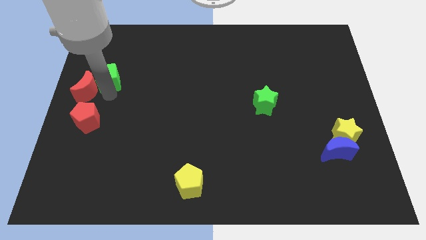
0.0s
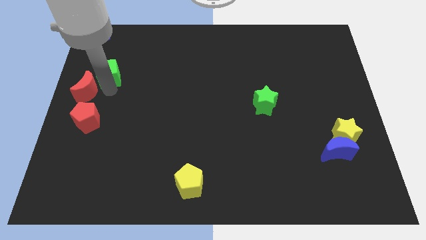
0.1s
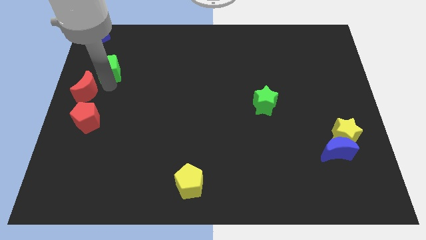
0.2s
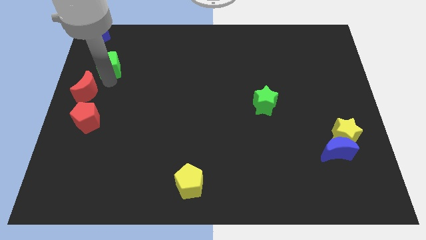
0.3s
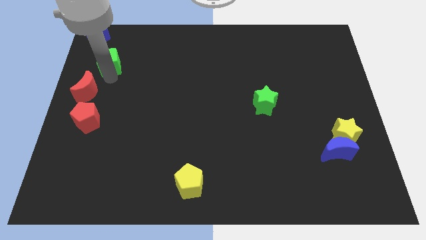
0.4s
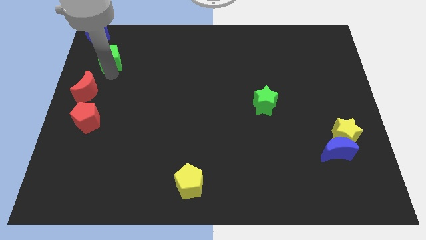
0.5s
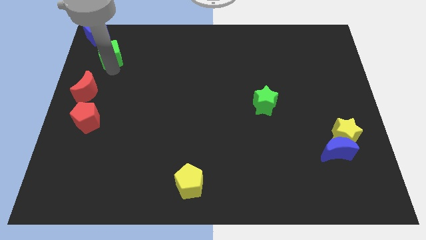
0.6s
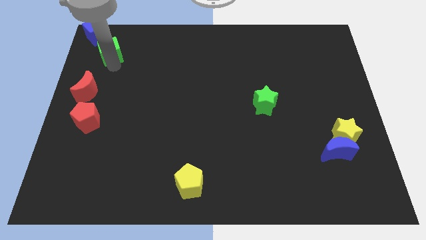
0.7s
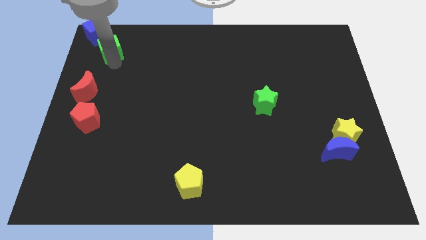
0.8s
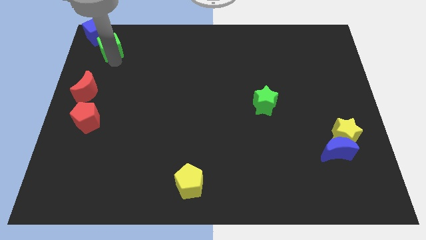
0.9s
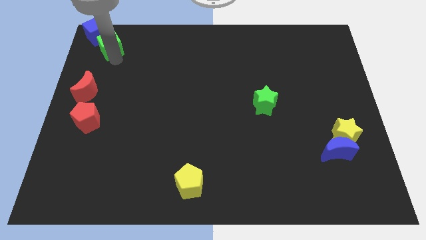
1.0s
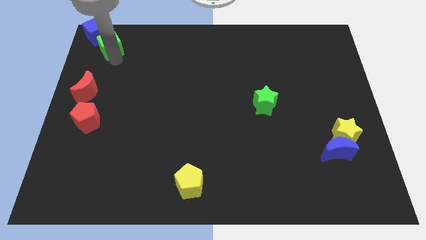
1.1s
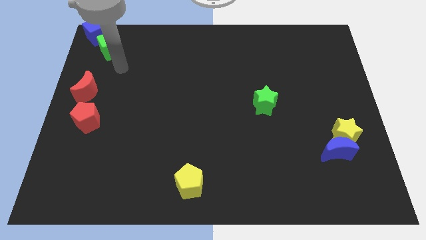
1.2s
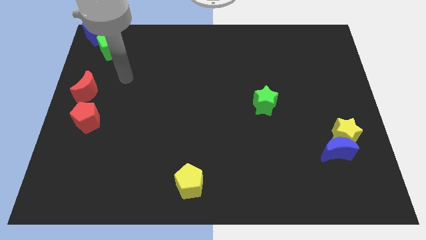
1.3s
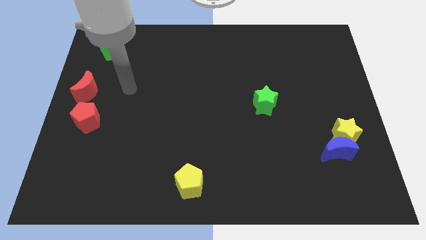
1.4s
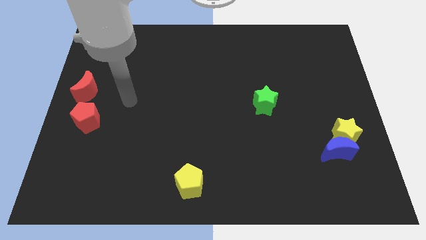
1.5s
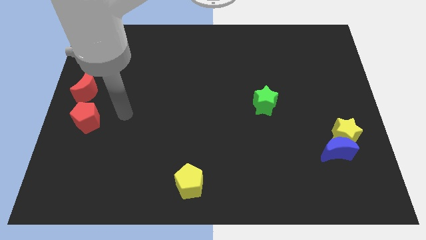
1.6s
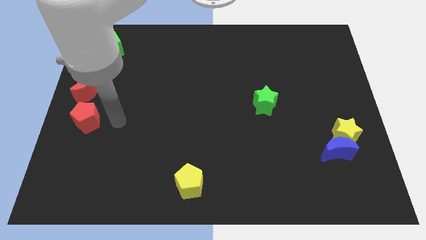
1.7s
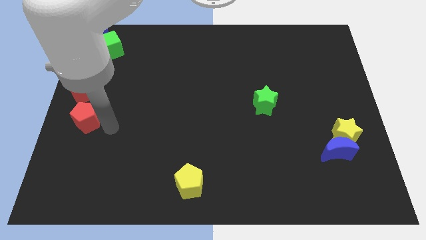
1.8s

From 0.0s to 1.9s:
move green cube into blue cube

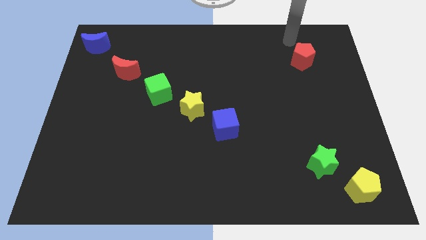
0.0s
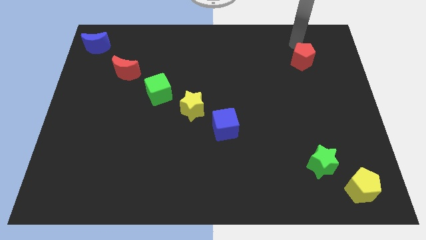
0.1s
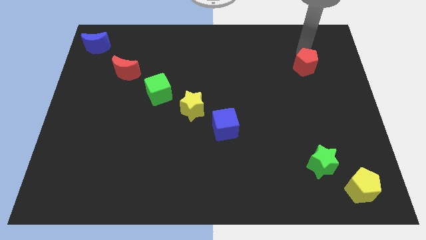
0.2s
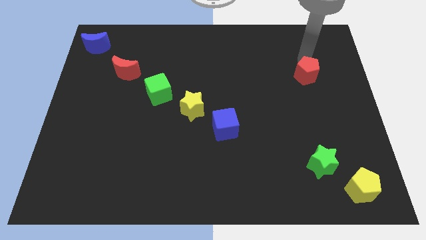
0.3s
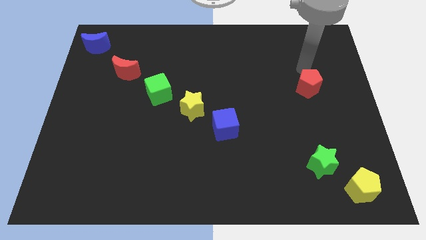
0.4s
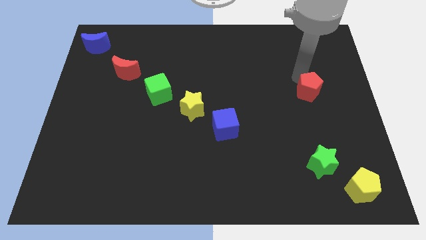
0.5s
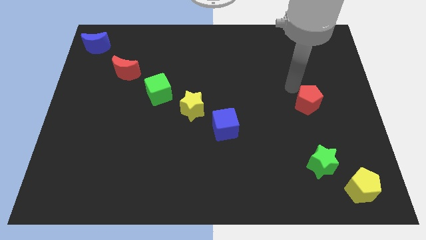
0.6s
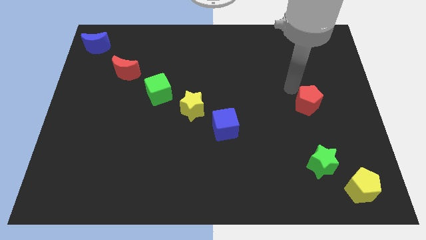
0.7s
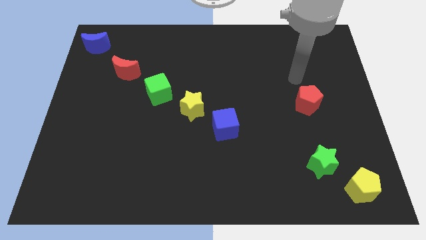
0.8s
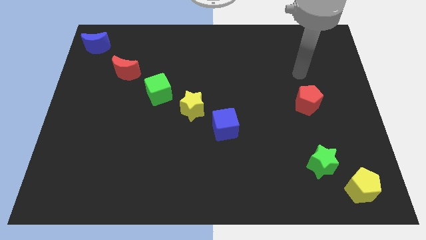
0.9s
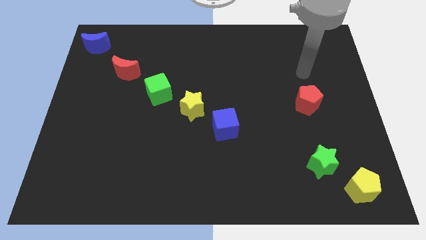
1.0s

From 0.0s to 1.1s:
slide the red pentagon slightly towards down

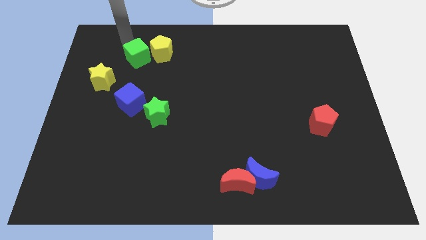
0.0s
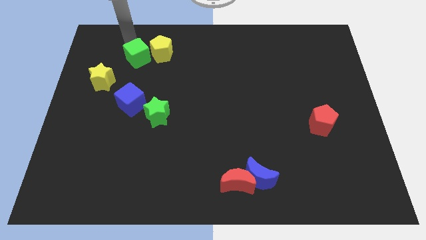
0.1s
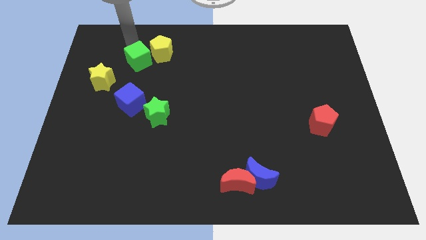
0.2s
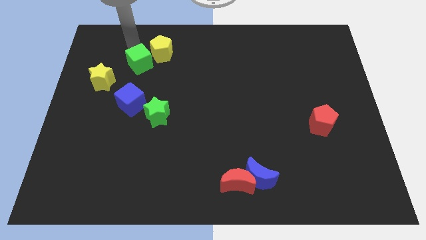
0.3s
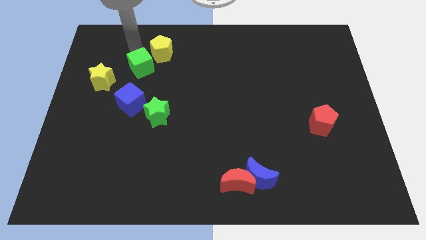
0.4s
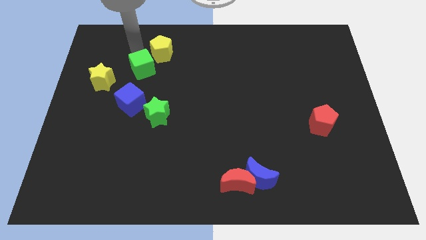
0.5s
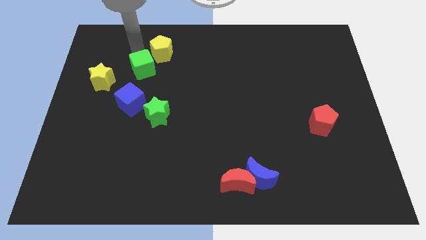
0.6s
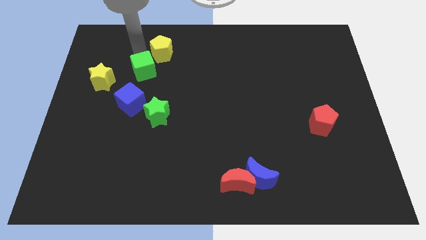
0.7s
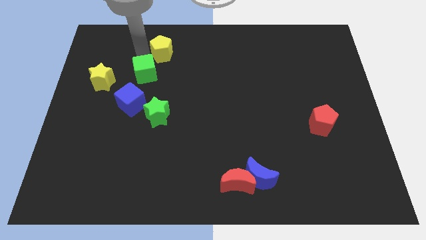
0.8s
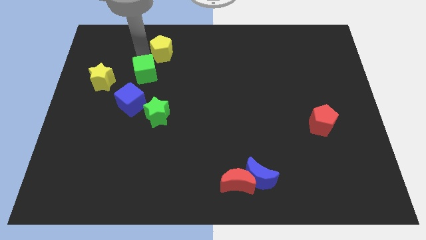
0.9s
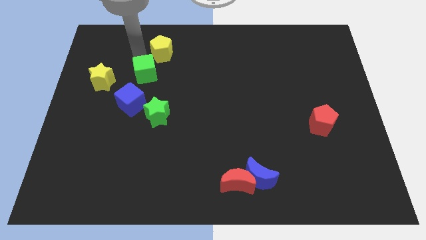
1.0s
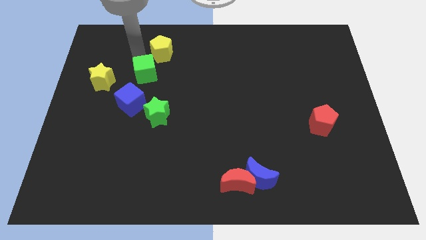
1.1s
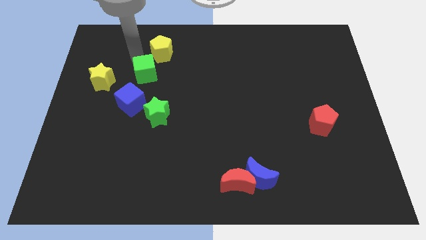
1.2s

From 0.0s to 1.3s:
push the green cube downward

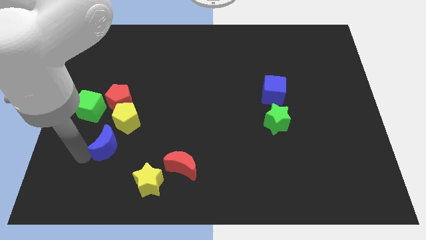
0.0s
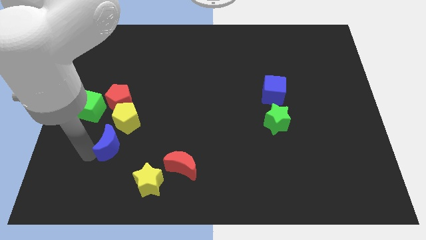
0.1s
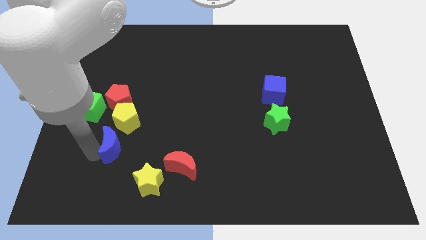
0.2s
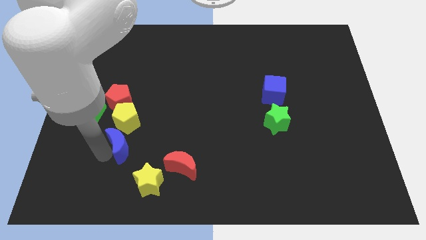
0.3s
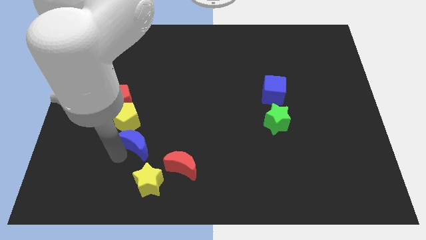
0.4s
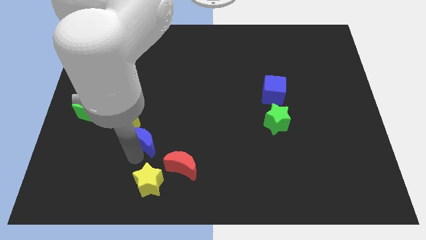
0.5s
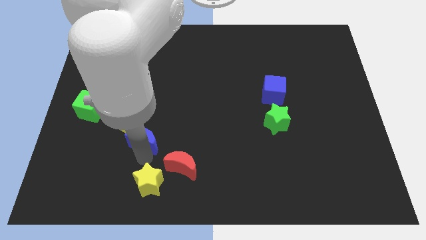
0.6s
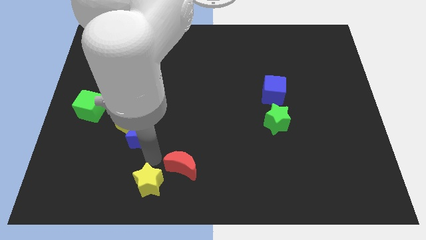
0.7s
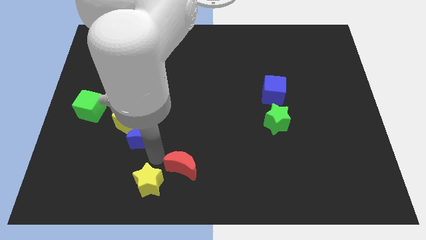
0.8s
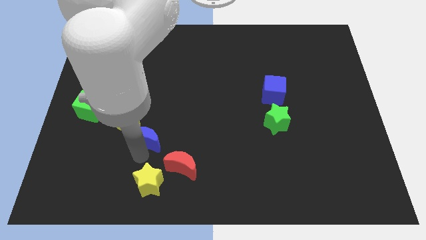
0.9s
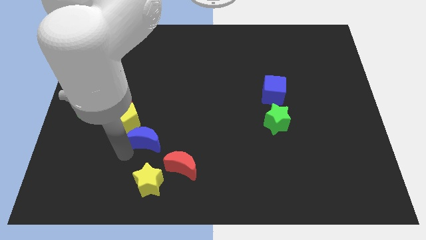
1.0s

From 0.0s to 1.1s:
place the blue crescent to the bottom right of the yellow pentagon

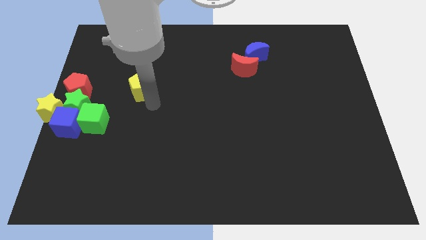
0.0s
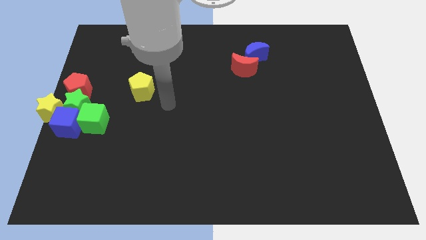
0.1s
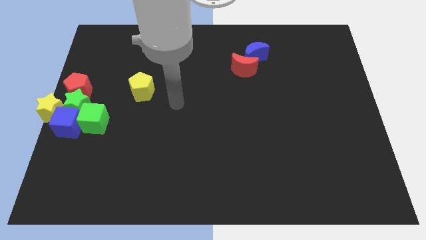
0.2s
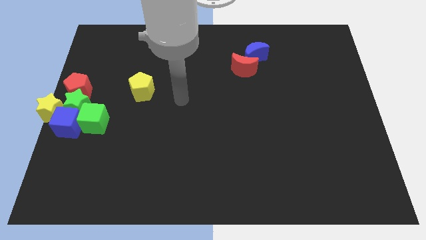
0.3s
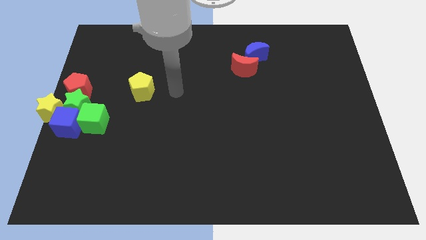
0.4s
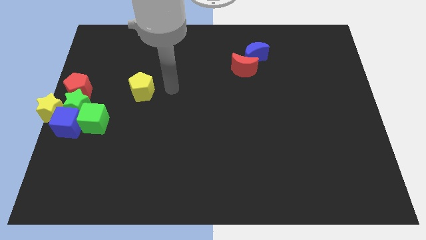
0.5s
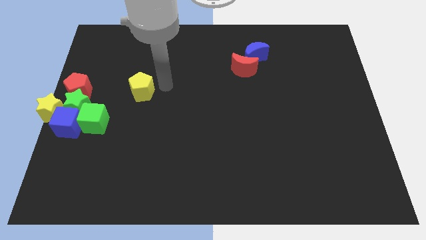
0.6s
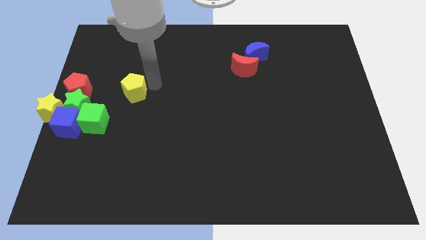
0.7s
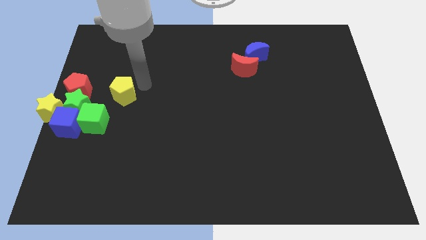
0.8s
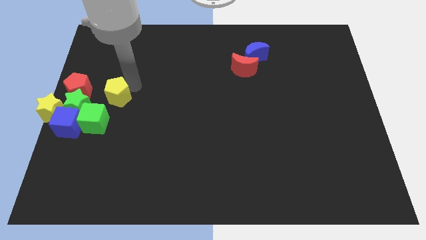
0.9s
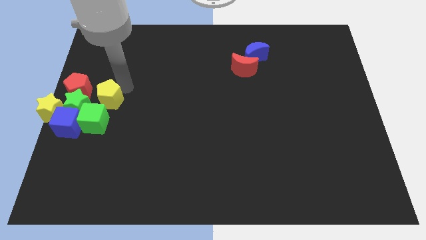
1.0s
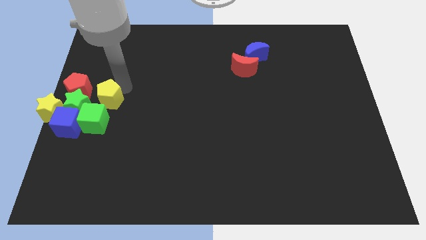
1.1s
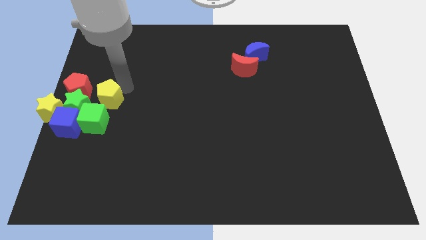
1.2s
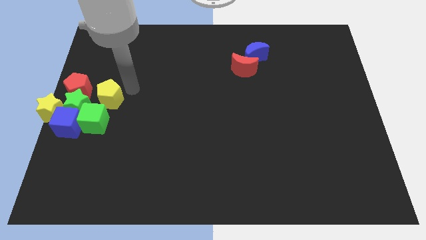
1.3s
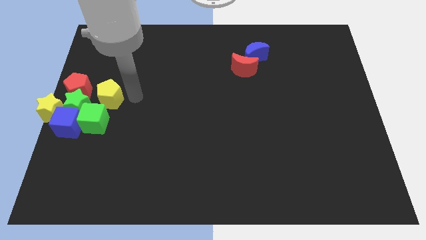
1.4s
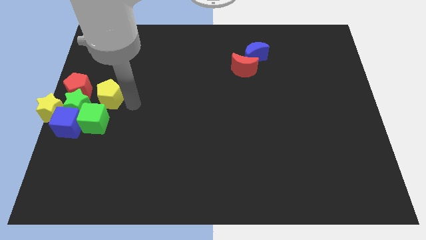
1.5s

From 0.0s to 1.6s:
slide the yellow pentagon to the top of the green cube

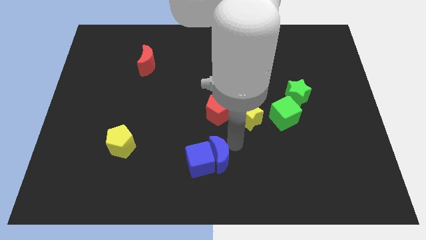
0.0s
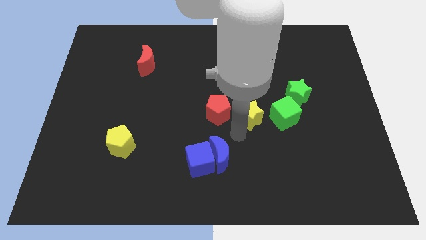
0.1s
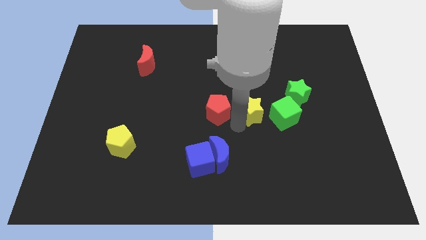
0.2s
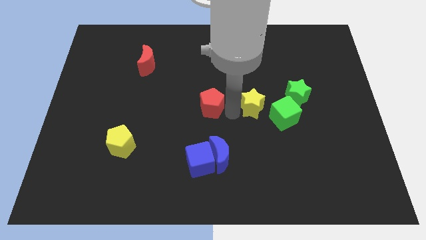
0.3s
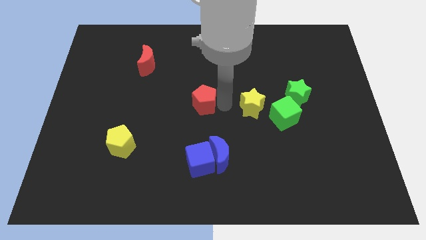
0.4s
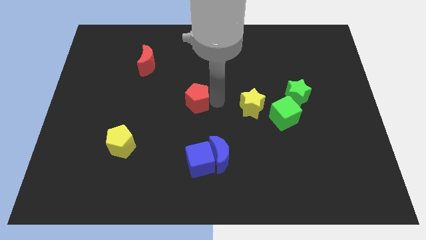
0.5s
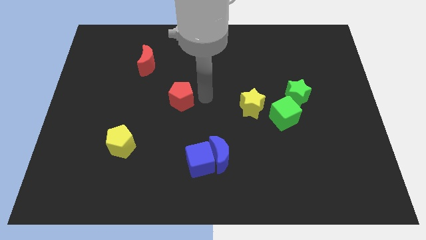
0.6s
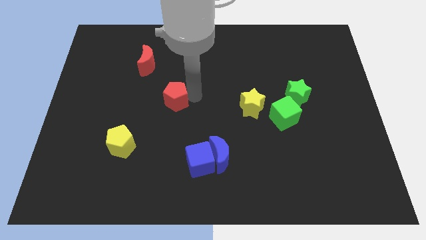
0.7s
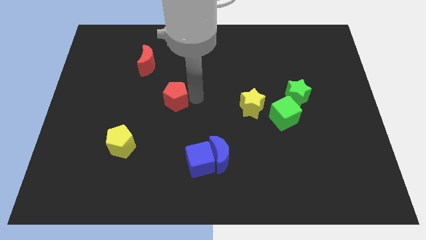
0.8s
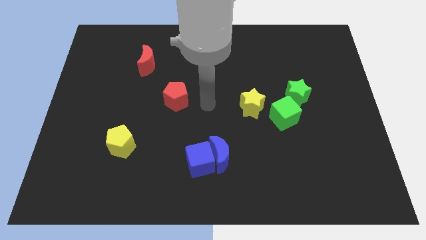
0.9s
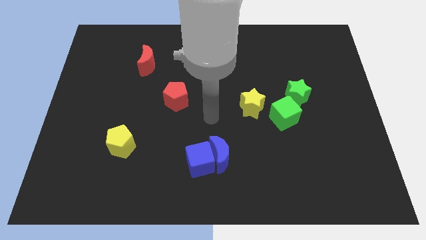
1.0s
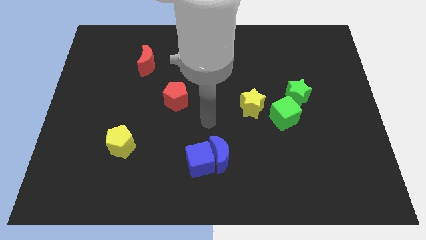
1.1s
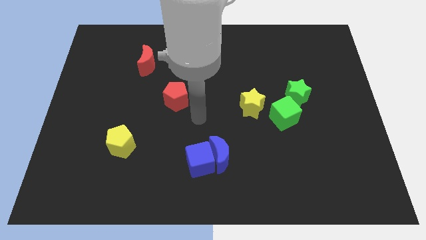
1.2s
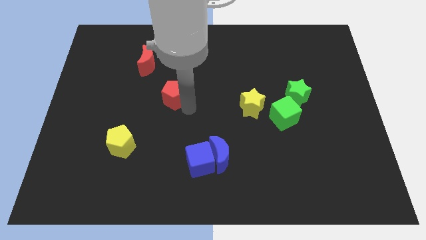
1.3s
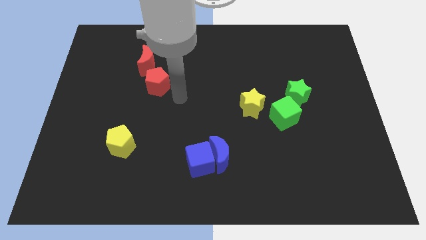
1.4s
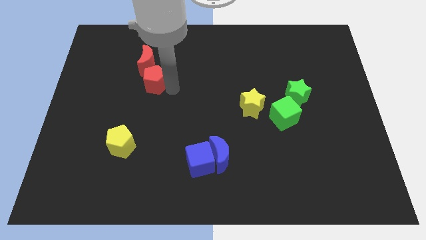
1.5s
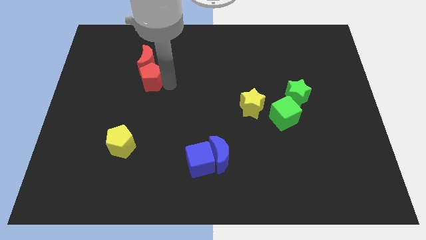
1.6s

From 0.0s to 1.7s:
push the red pentagon towards the red crescent
